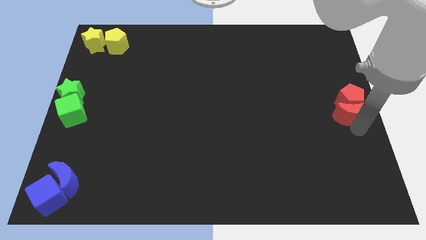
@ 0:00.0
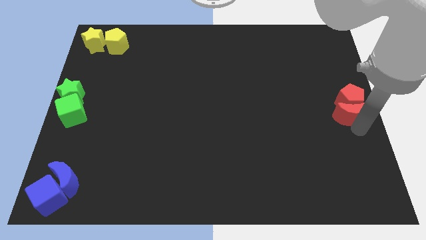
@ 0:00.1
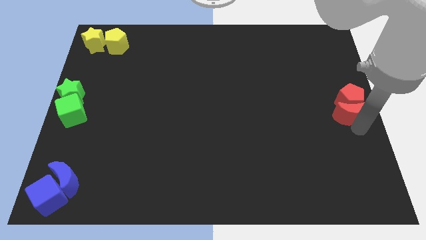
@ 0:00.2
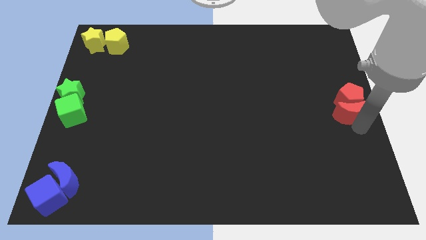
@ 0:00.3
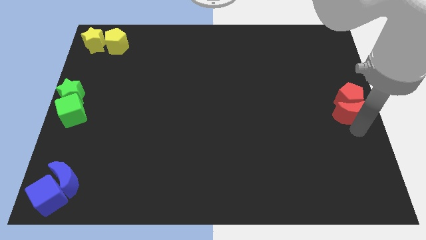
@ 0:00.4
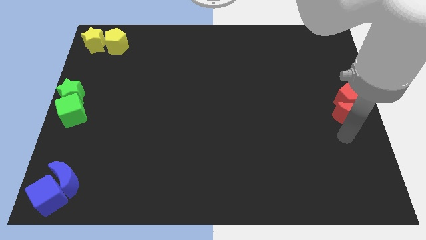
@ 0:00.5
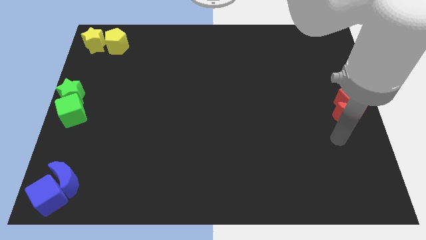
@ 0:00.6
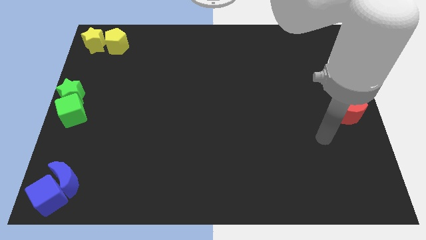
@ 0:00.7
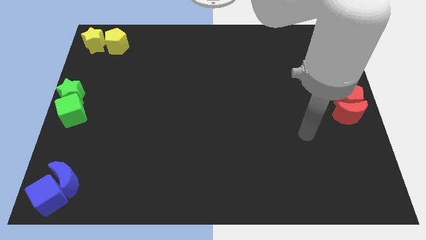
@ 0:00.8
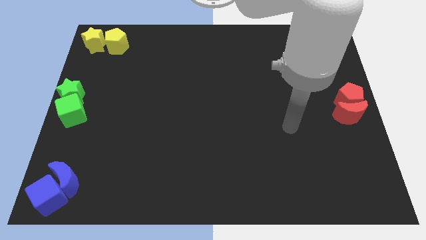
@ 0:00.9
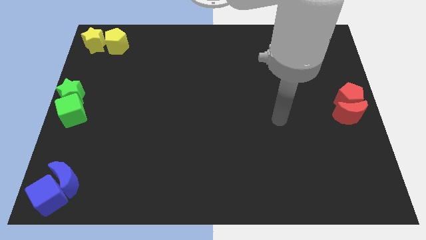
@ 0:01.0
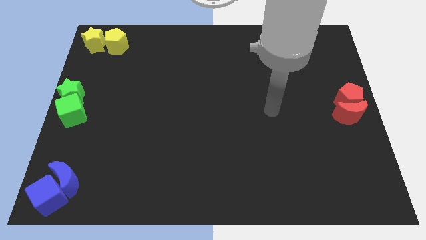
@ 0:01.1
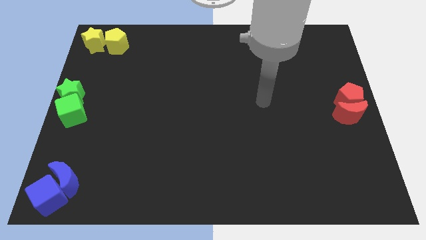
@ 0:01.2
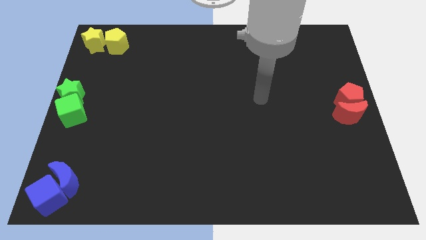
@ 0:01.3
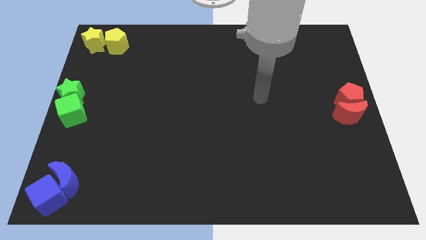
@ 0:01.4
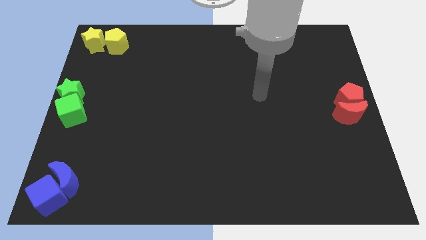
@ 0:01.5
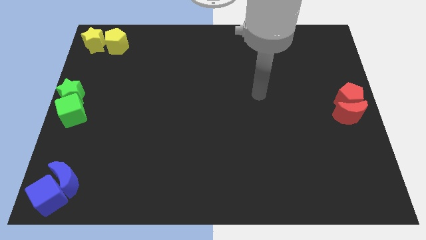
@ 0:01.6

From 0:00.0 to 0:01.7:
move your arm away from the red moon

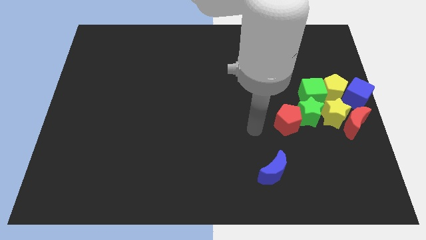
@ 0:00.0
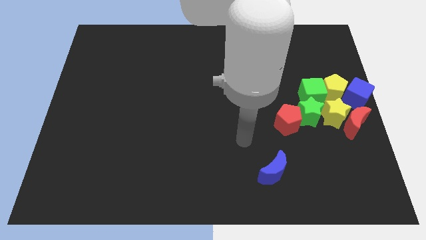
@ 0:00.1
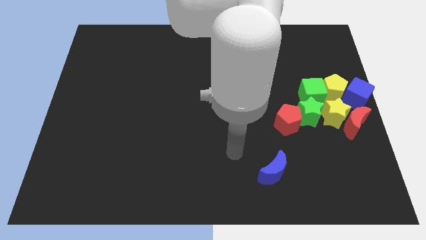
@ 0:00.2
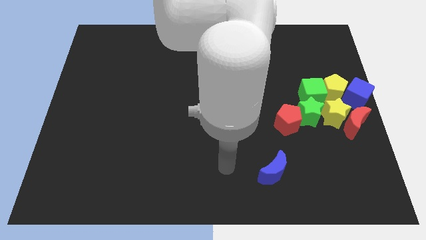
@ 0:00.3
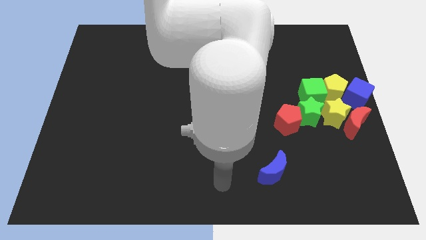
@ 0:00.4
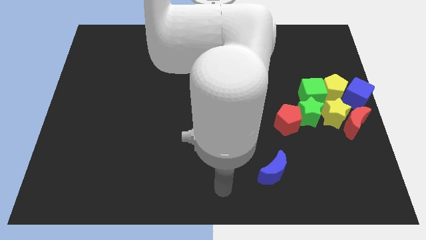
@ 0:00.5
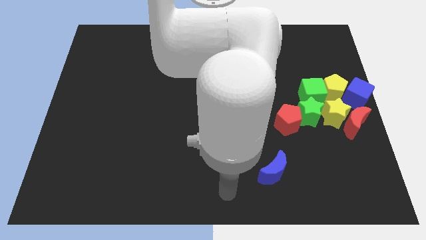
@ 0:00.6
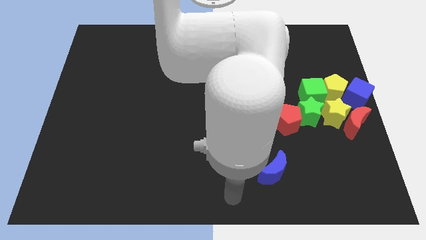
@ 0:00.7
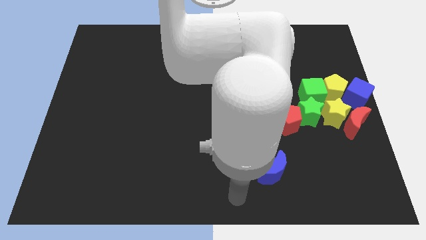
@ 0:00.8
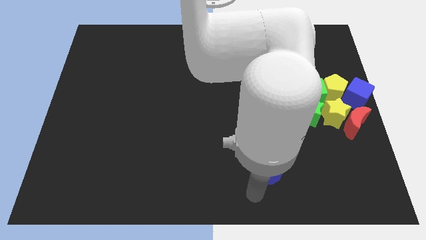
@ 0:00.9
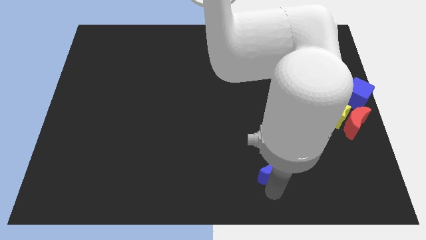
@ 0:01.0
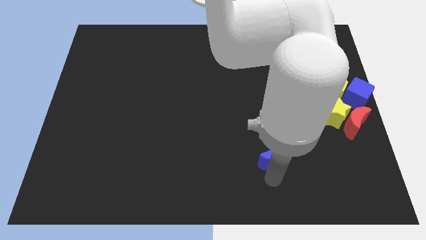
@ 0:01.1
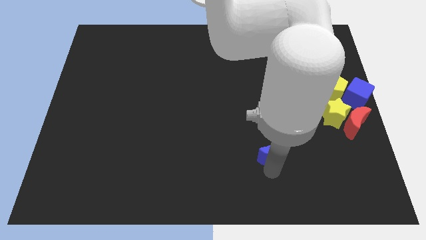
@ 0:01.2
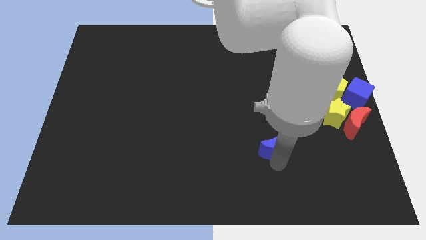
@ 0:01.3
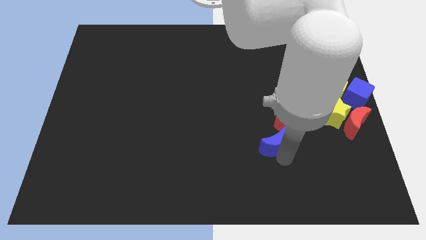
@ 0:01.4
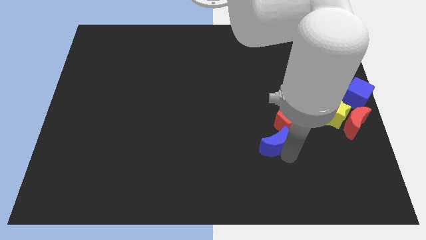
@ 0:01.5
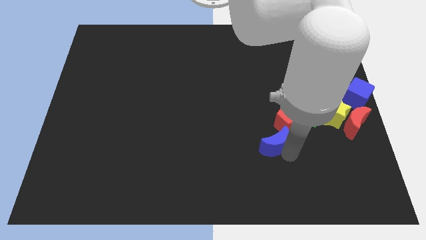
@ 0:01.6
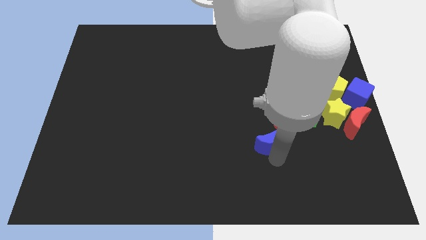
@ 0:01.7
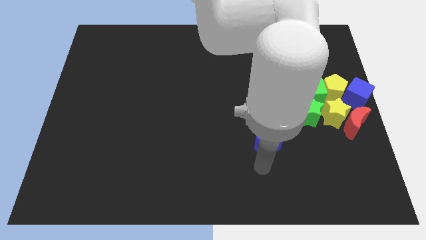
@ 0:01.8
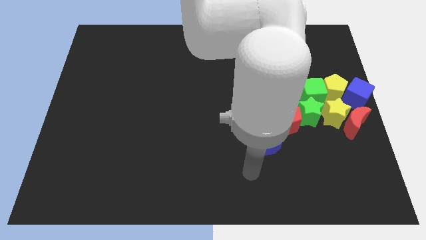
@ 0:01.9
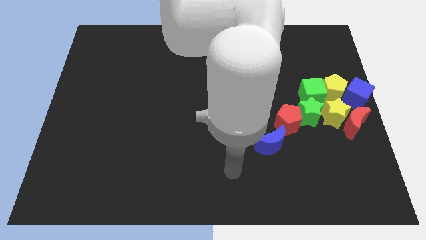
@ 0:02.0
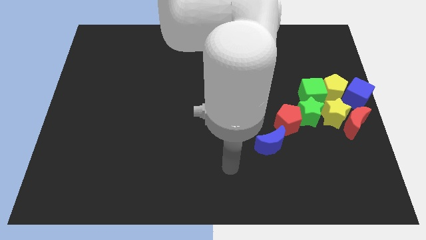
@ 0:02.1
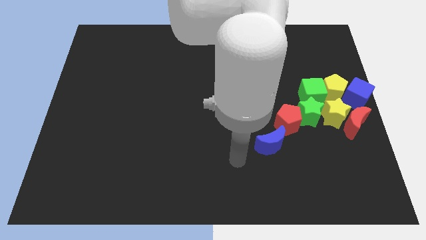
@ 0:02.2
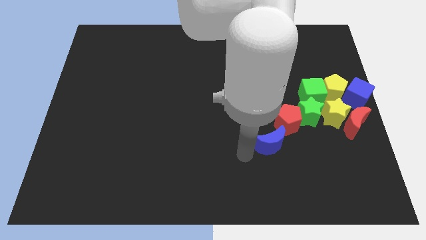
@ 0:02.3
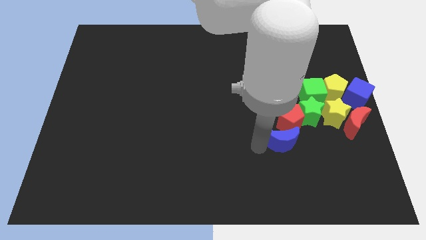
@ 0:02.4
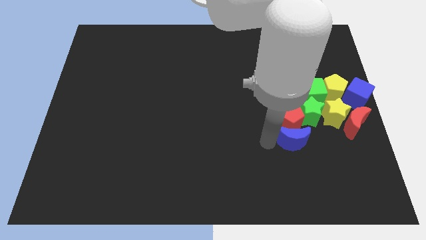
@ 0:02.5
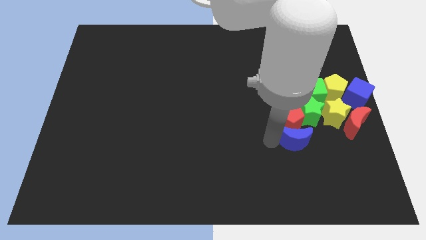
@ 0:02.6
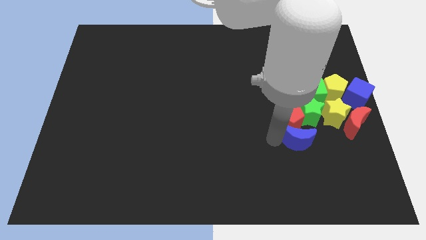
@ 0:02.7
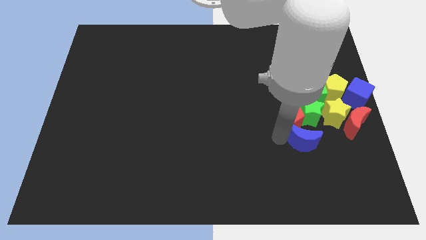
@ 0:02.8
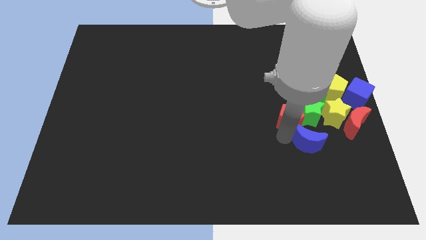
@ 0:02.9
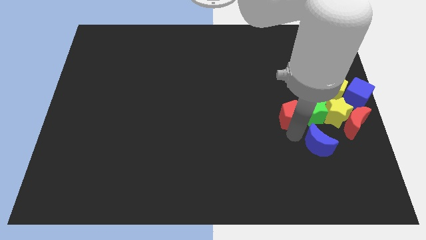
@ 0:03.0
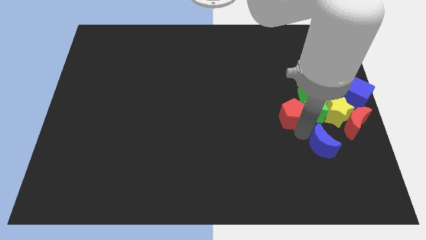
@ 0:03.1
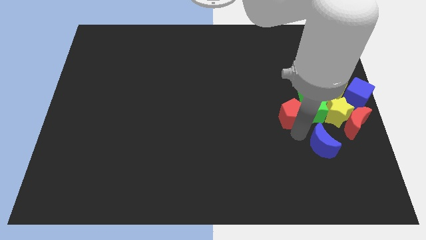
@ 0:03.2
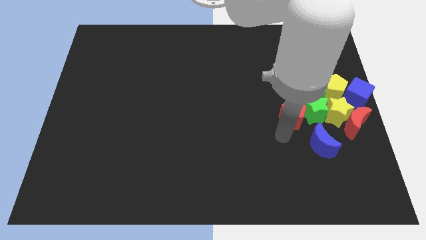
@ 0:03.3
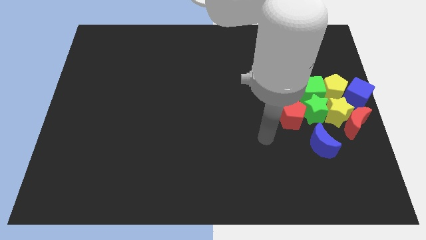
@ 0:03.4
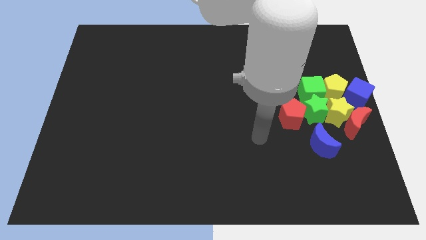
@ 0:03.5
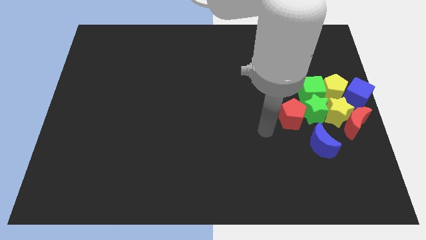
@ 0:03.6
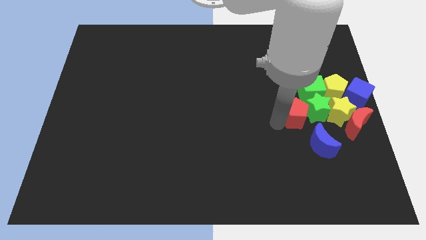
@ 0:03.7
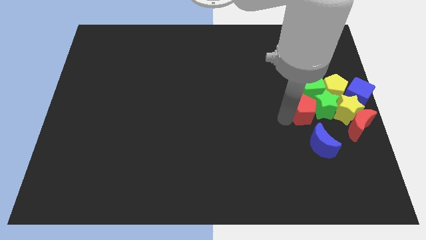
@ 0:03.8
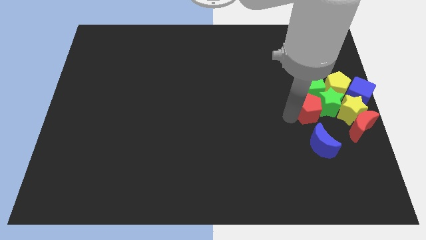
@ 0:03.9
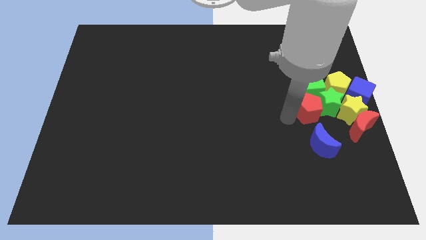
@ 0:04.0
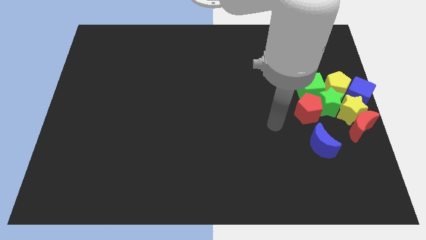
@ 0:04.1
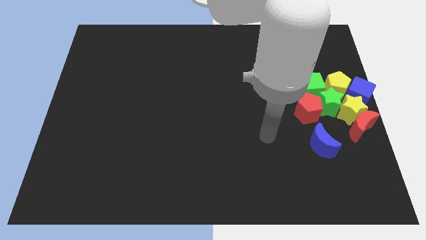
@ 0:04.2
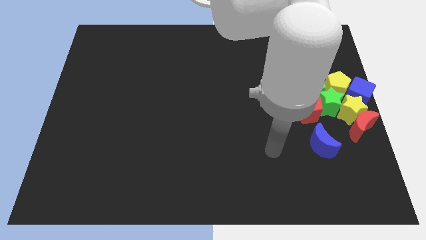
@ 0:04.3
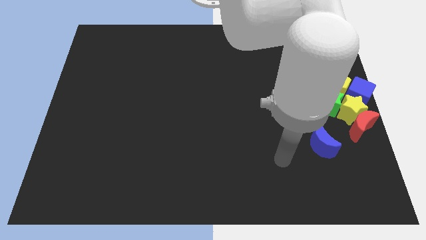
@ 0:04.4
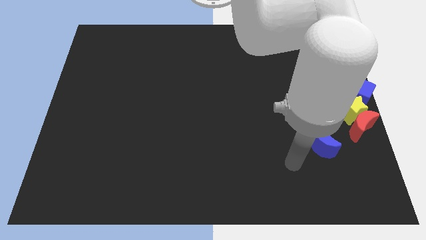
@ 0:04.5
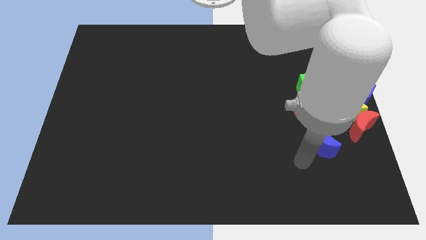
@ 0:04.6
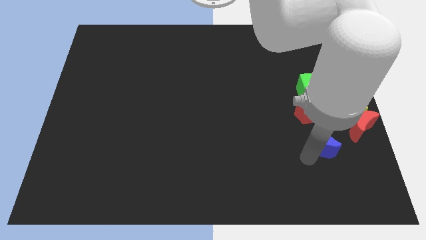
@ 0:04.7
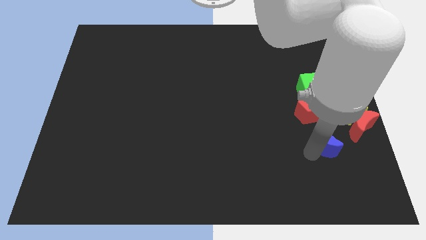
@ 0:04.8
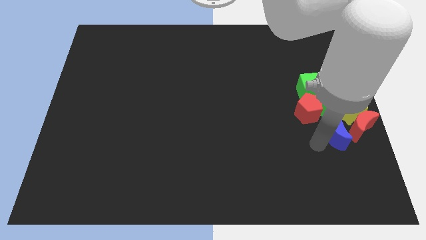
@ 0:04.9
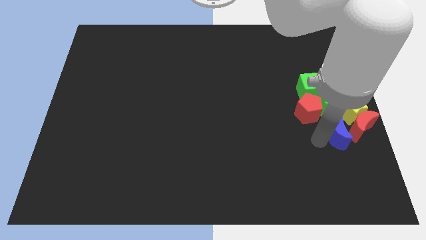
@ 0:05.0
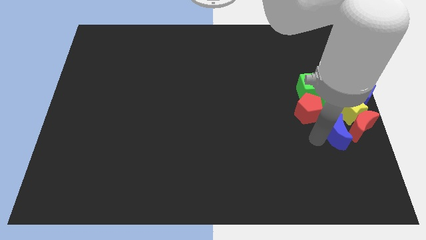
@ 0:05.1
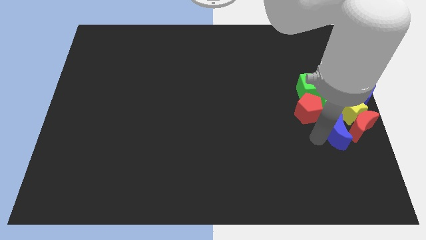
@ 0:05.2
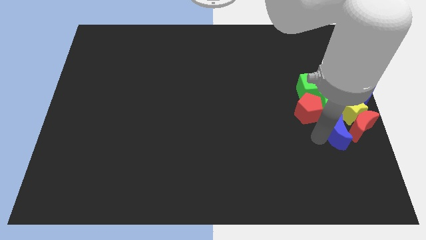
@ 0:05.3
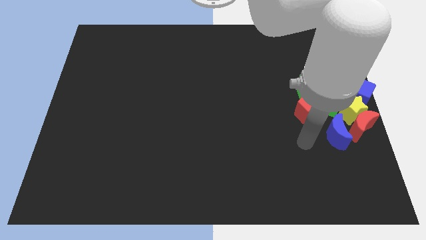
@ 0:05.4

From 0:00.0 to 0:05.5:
move the blue moon into the group of blocks

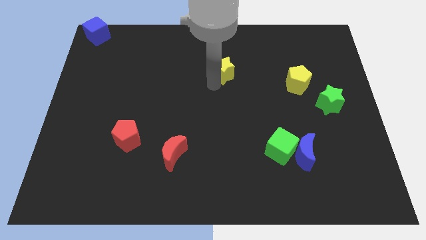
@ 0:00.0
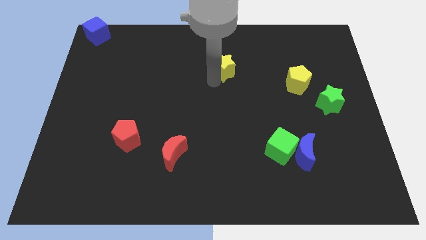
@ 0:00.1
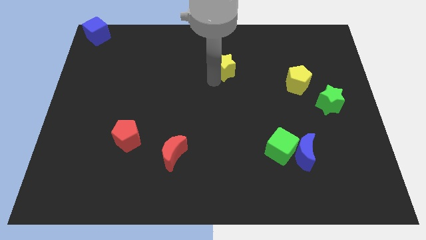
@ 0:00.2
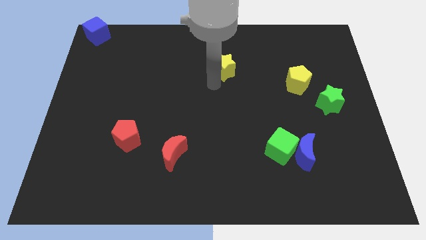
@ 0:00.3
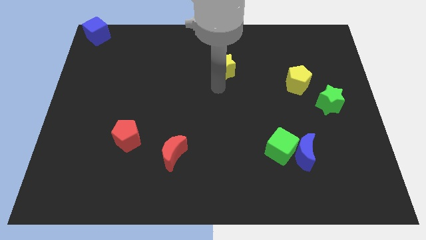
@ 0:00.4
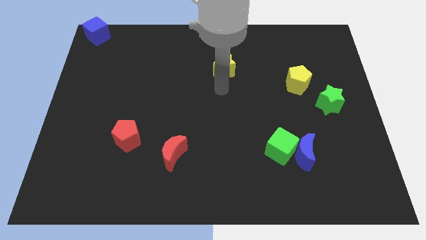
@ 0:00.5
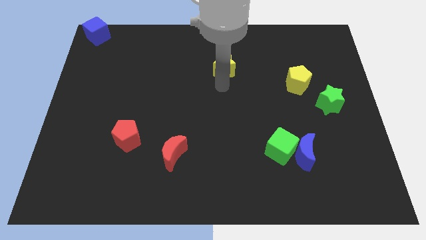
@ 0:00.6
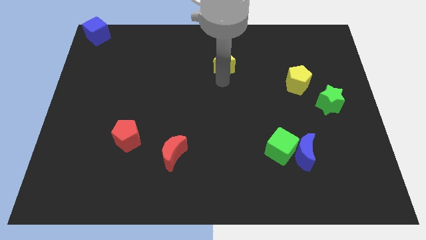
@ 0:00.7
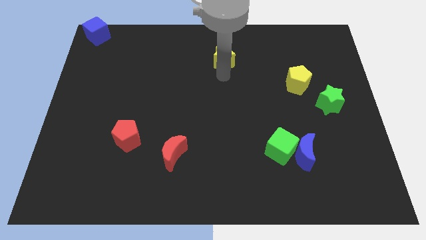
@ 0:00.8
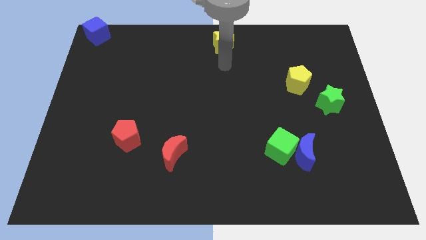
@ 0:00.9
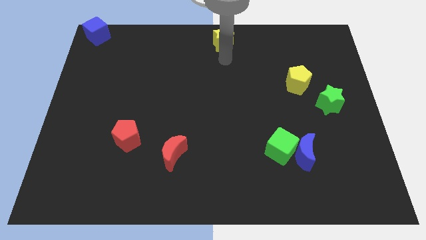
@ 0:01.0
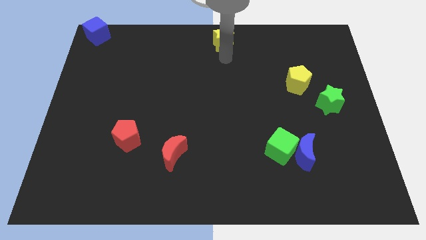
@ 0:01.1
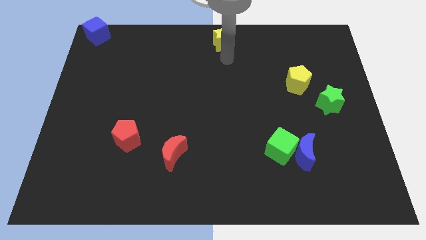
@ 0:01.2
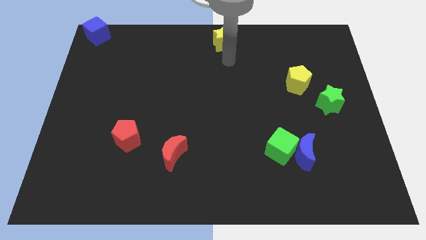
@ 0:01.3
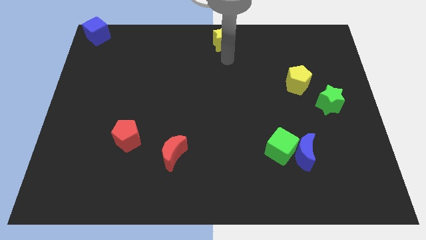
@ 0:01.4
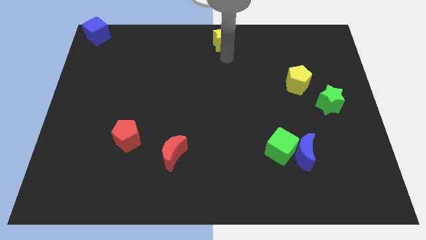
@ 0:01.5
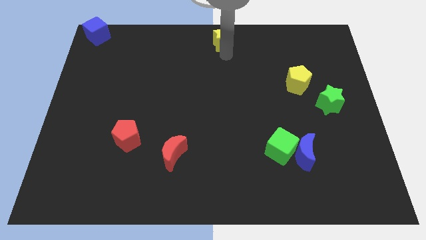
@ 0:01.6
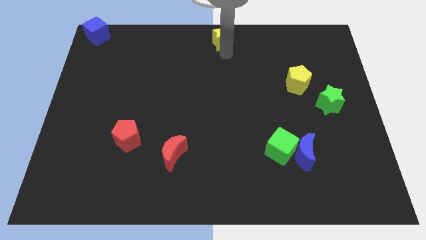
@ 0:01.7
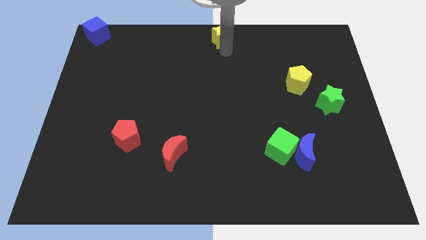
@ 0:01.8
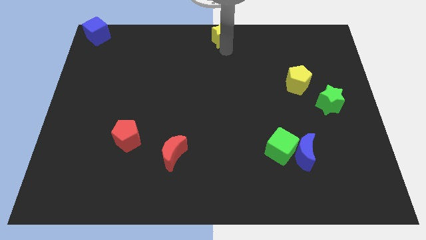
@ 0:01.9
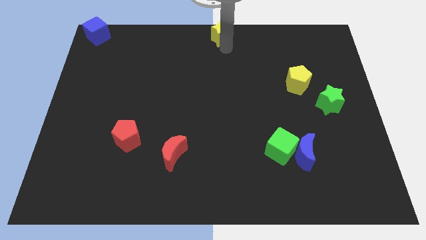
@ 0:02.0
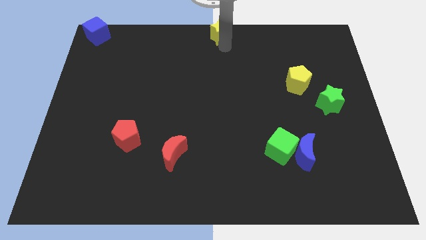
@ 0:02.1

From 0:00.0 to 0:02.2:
push yellow star to the top center of the board
